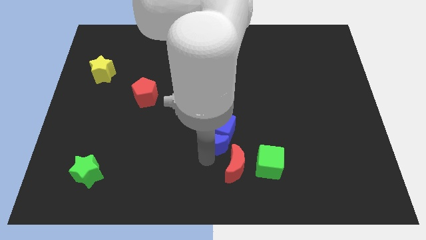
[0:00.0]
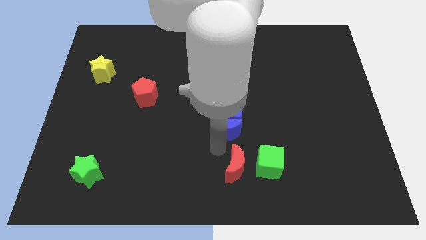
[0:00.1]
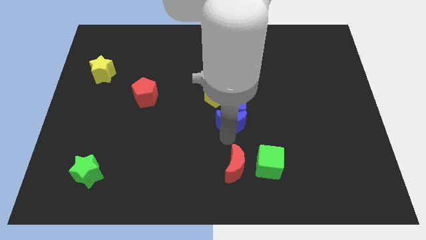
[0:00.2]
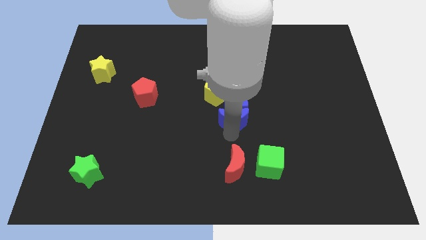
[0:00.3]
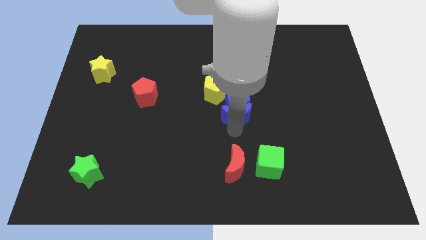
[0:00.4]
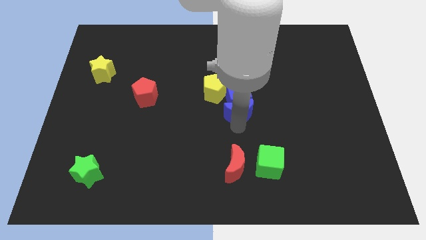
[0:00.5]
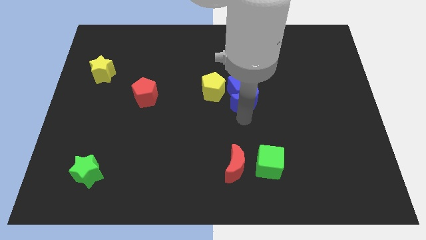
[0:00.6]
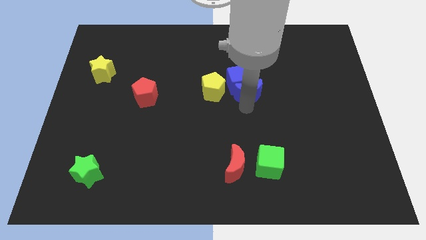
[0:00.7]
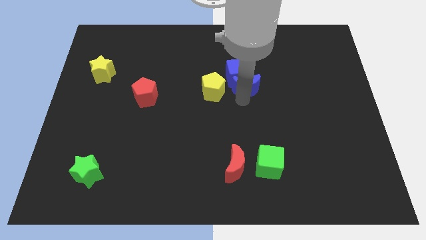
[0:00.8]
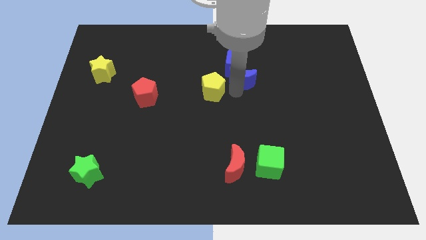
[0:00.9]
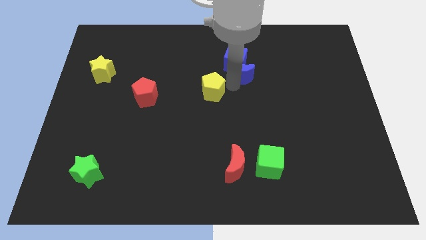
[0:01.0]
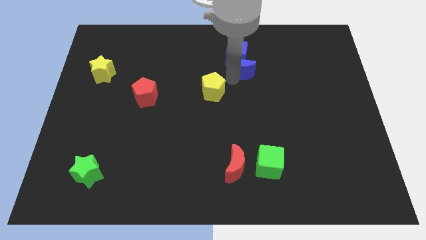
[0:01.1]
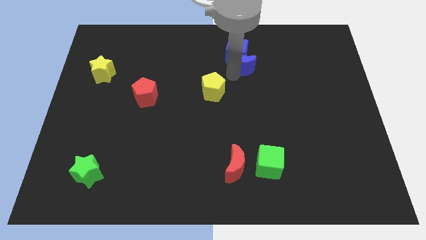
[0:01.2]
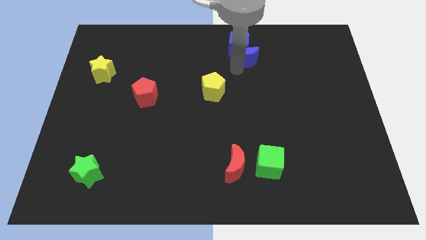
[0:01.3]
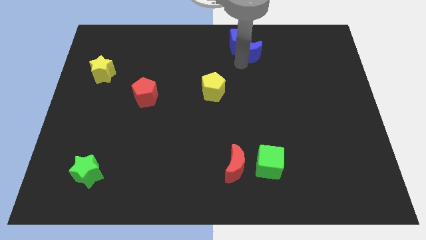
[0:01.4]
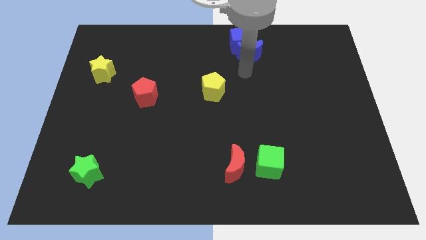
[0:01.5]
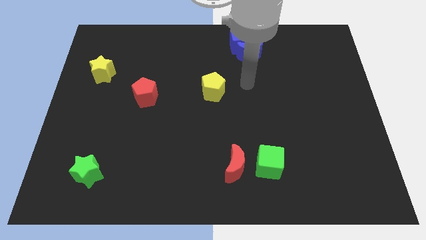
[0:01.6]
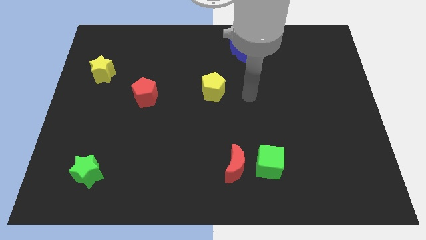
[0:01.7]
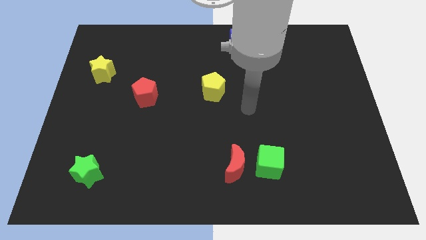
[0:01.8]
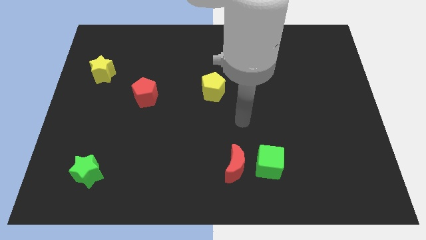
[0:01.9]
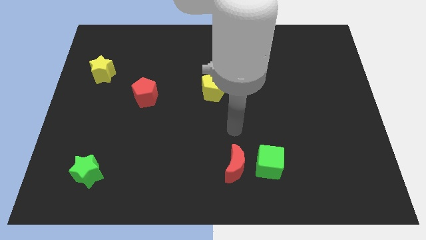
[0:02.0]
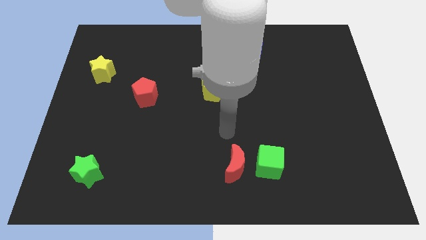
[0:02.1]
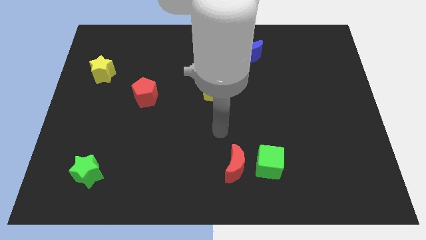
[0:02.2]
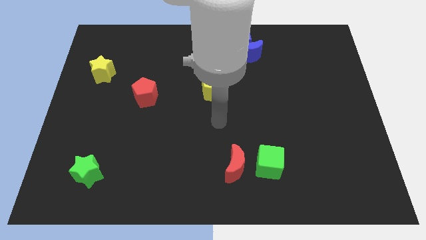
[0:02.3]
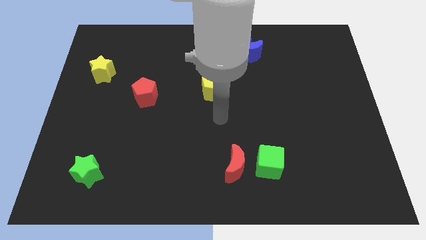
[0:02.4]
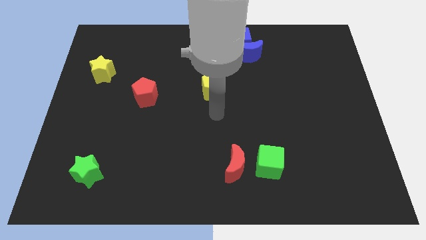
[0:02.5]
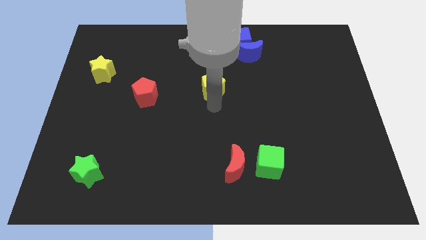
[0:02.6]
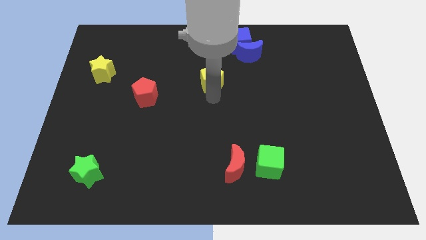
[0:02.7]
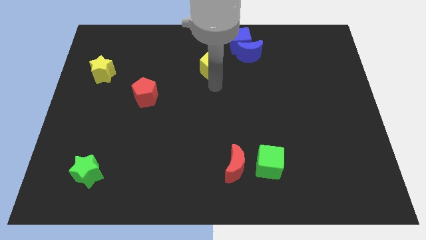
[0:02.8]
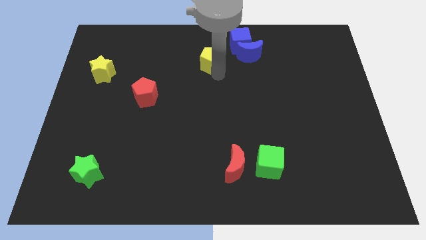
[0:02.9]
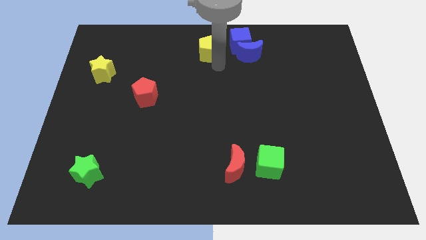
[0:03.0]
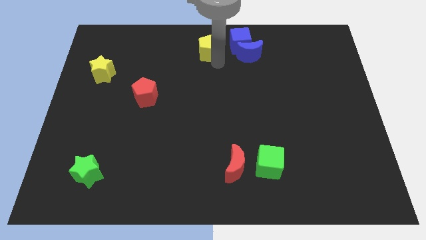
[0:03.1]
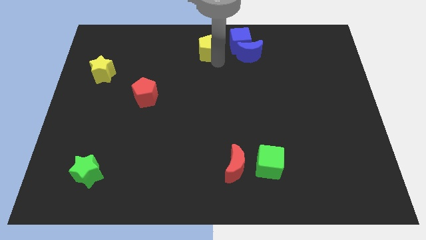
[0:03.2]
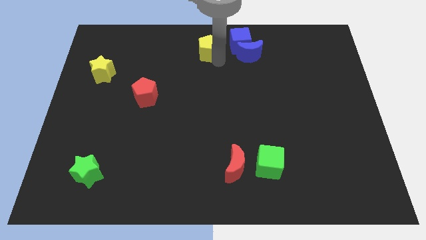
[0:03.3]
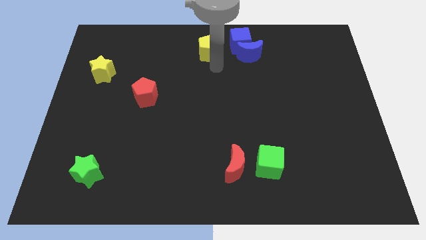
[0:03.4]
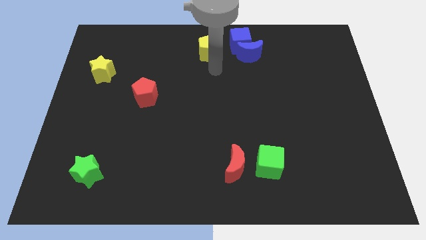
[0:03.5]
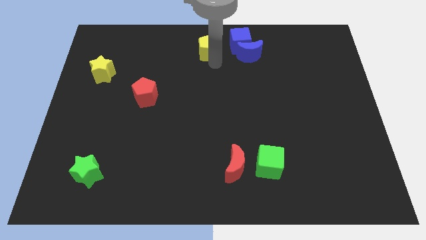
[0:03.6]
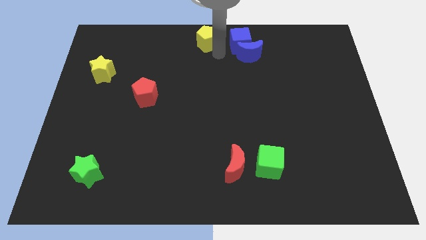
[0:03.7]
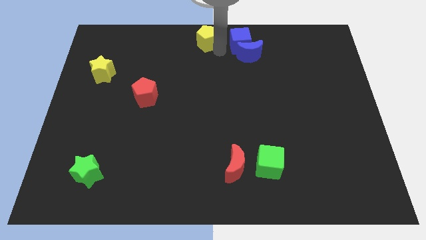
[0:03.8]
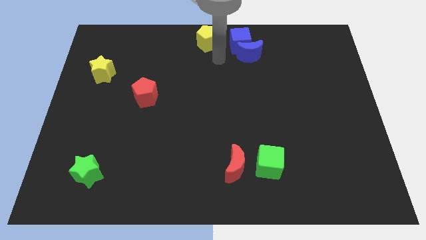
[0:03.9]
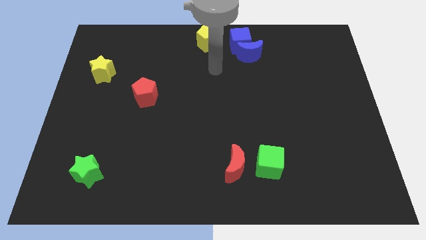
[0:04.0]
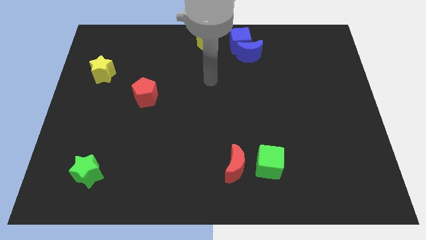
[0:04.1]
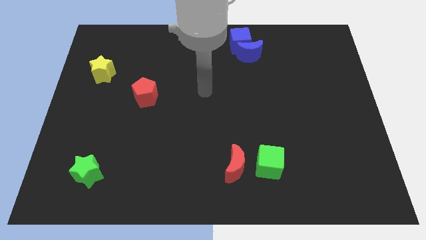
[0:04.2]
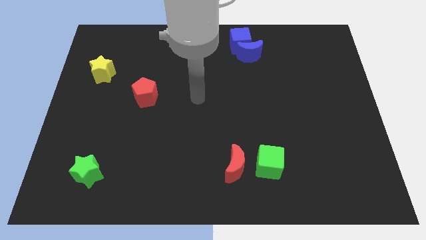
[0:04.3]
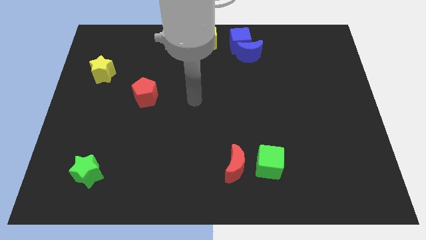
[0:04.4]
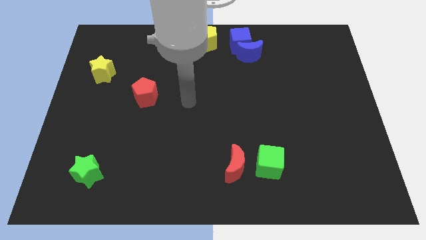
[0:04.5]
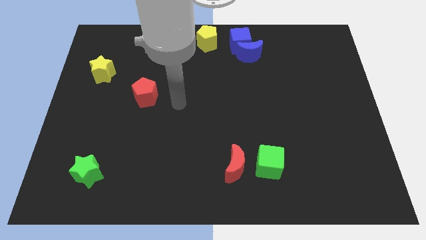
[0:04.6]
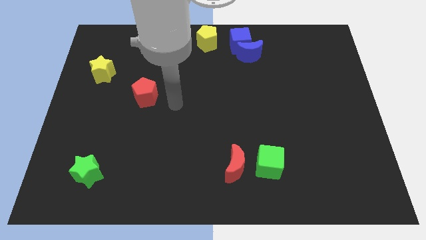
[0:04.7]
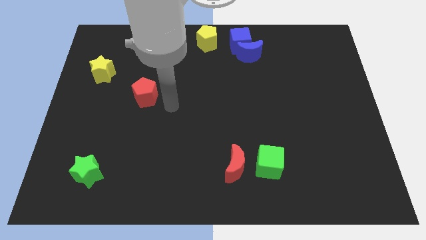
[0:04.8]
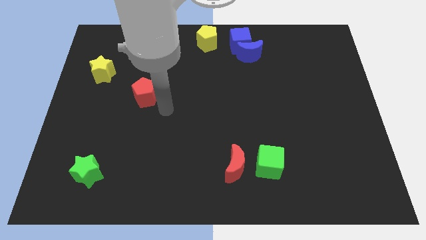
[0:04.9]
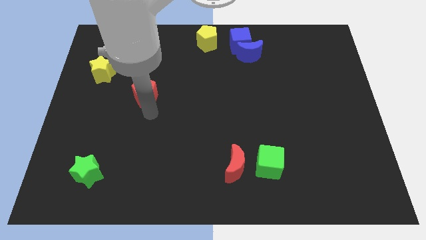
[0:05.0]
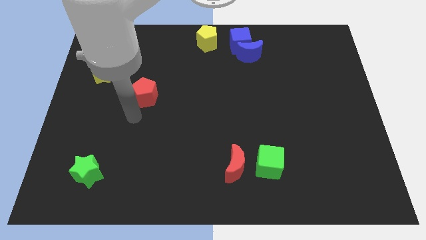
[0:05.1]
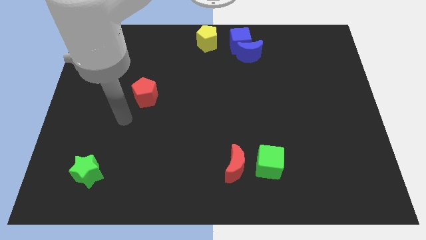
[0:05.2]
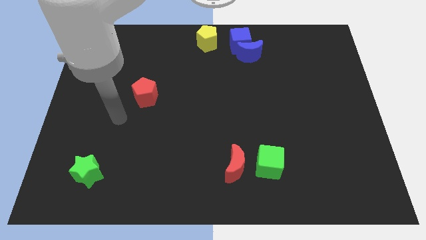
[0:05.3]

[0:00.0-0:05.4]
place the blue blocks at the top center of the board

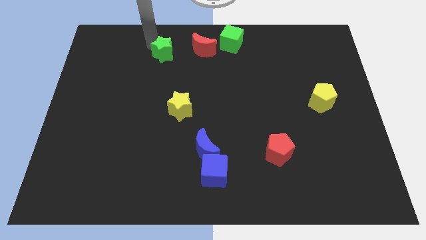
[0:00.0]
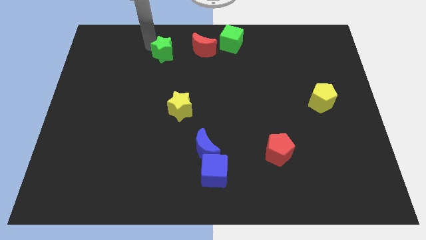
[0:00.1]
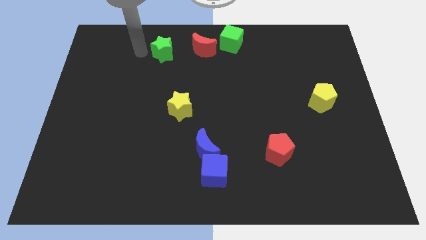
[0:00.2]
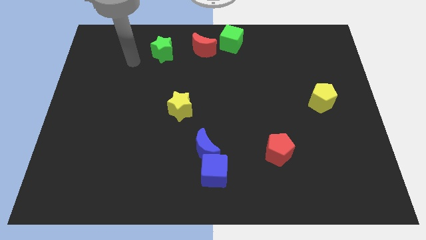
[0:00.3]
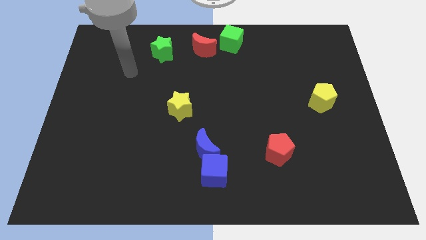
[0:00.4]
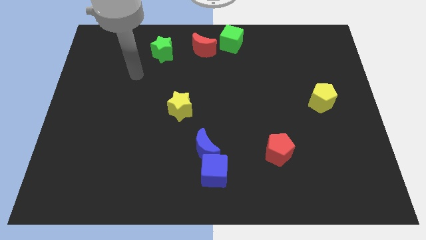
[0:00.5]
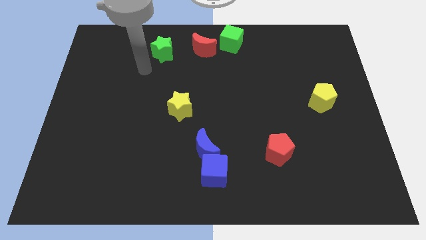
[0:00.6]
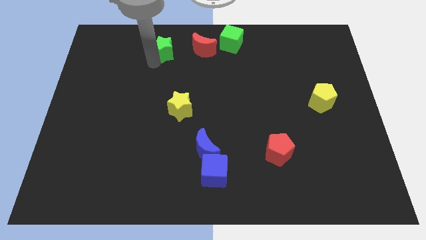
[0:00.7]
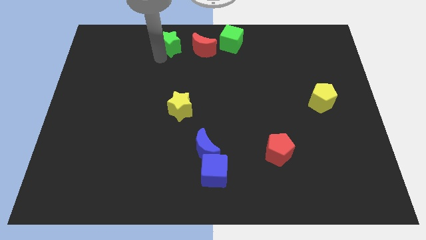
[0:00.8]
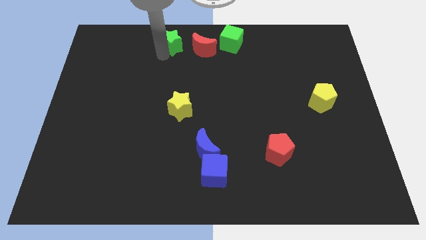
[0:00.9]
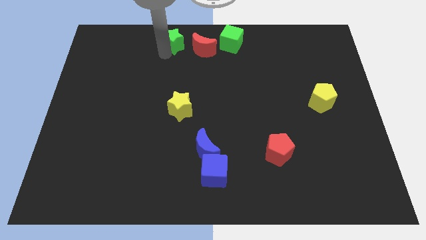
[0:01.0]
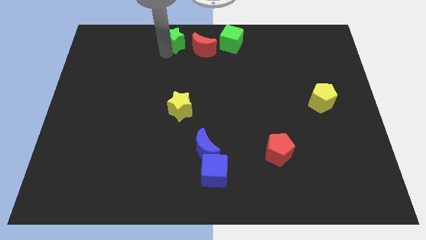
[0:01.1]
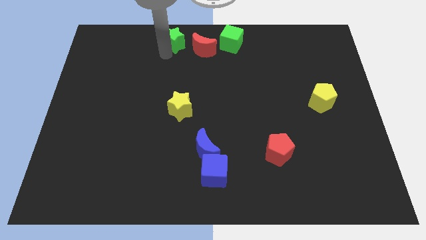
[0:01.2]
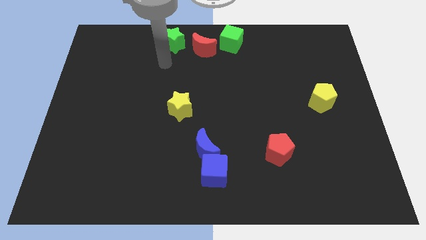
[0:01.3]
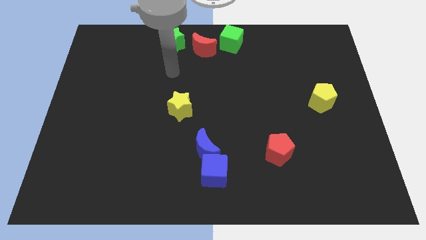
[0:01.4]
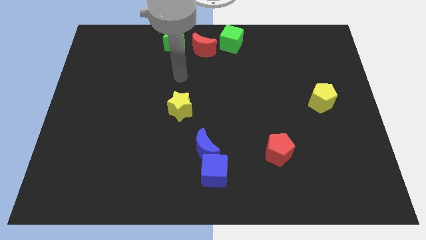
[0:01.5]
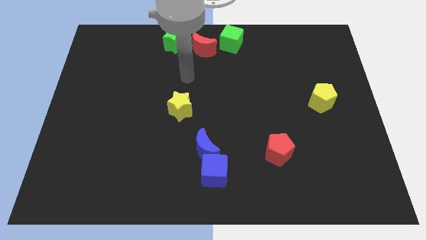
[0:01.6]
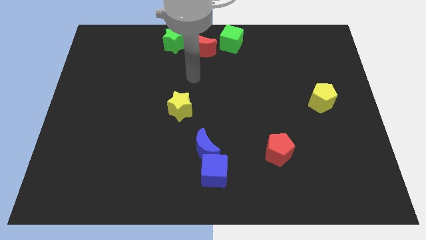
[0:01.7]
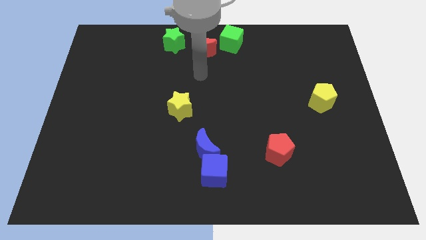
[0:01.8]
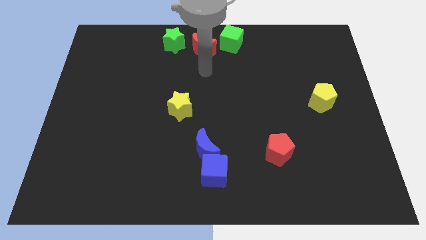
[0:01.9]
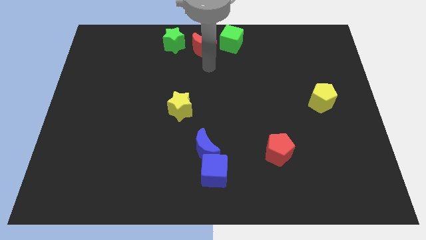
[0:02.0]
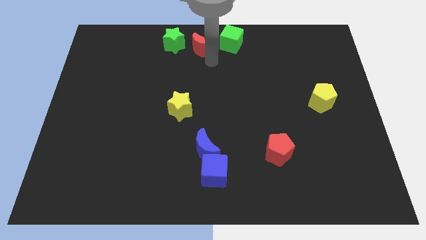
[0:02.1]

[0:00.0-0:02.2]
move the green star close to the red moon

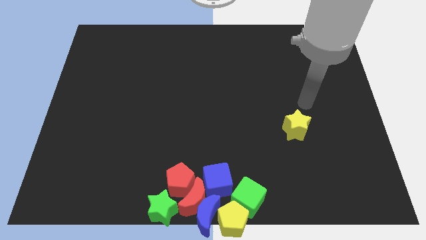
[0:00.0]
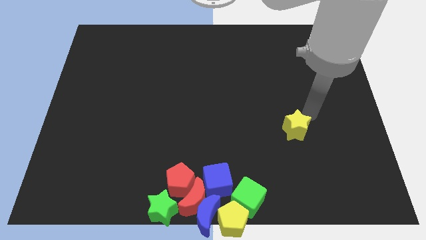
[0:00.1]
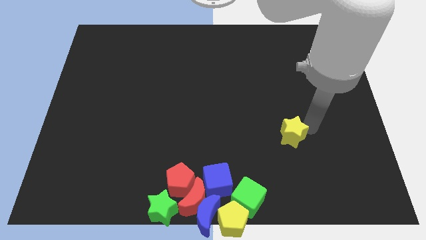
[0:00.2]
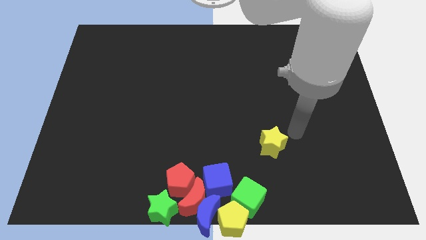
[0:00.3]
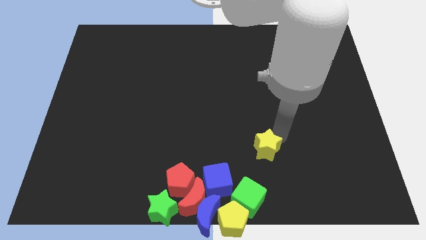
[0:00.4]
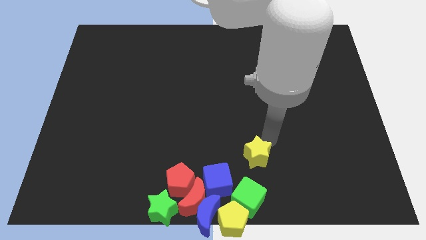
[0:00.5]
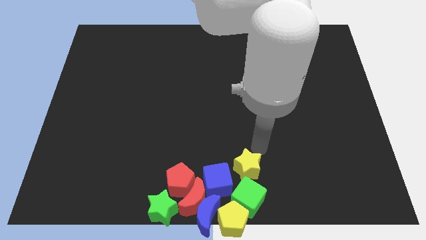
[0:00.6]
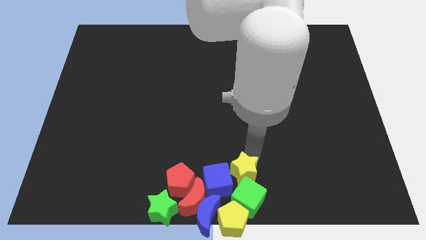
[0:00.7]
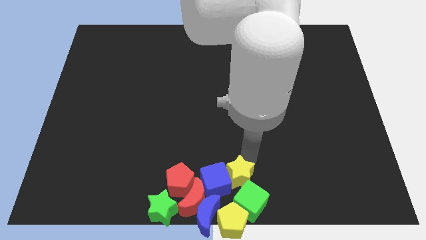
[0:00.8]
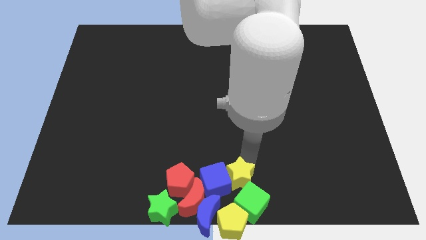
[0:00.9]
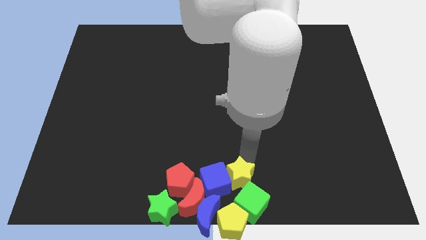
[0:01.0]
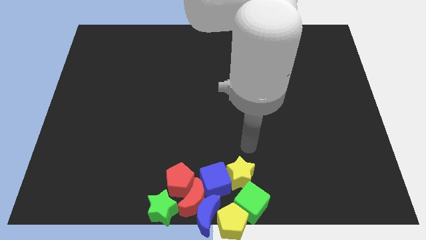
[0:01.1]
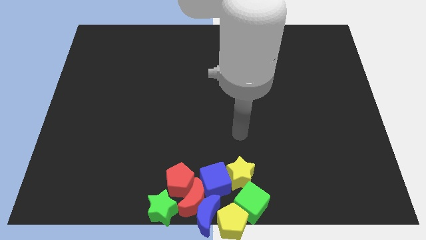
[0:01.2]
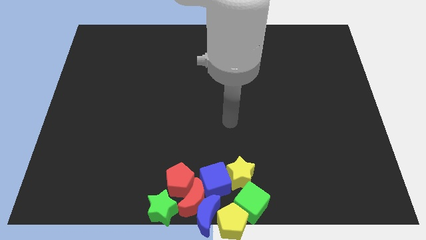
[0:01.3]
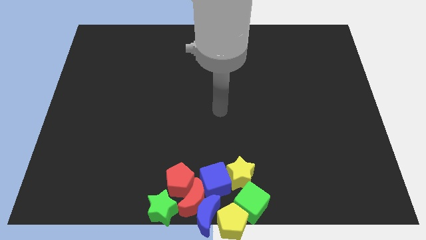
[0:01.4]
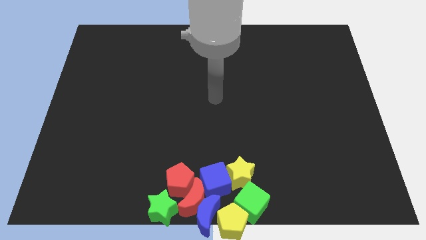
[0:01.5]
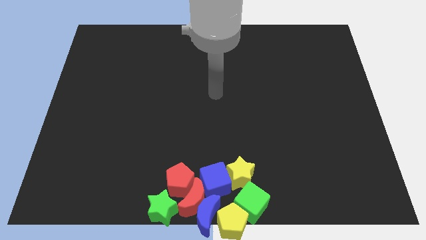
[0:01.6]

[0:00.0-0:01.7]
push the yellow star towards the group of blocks
